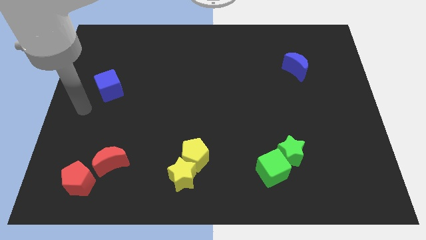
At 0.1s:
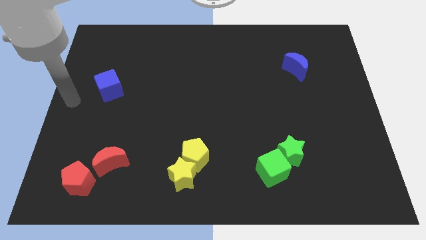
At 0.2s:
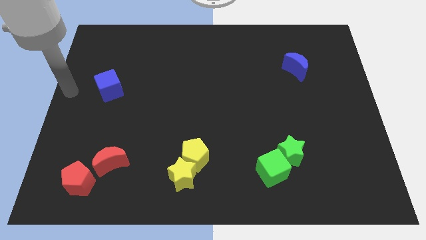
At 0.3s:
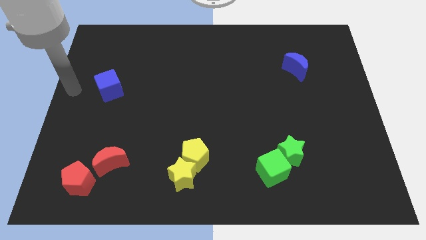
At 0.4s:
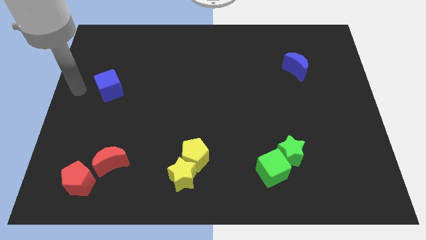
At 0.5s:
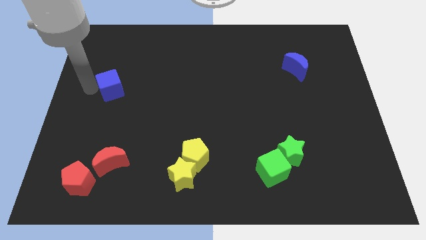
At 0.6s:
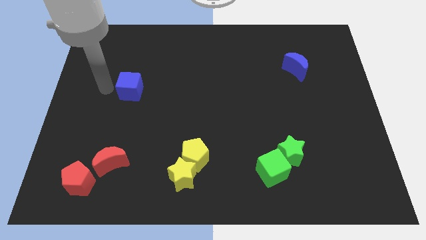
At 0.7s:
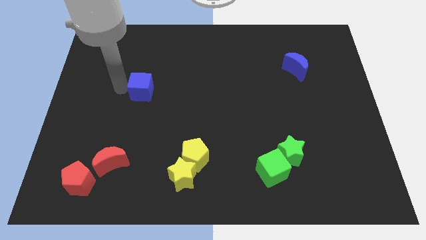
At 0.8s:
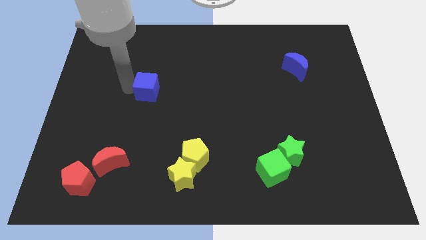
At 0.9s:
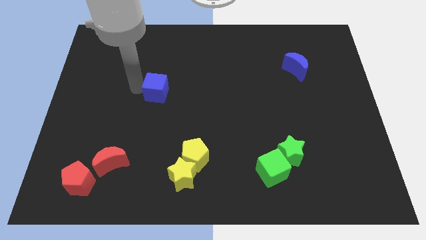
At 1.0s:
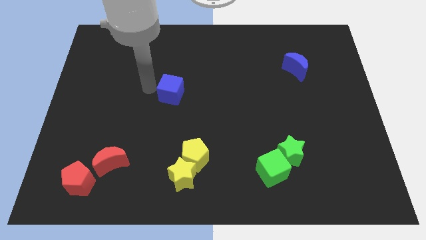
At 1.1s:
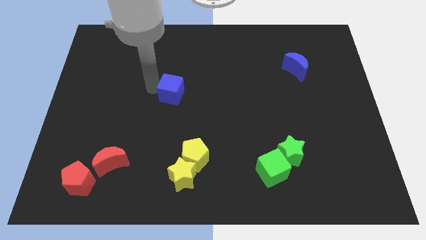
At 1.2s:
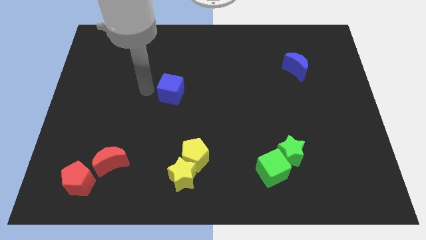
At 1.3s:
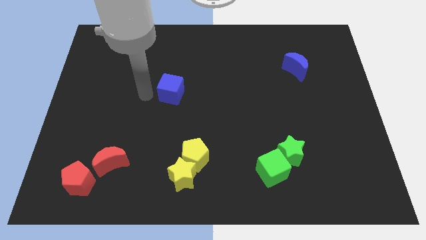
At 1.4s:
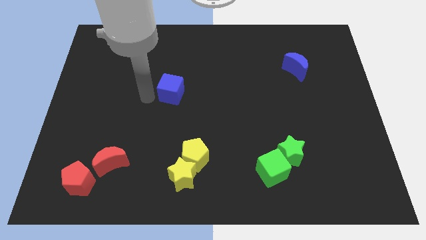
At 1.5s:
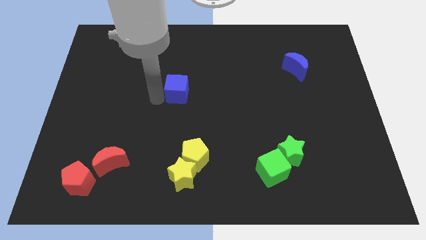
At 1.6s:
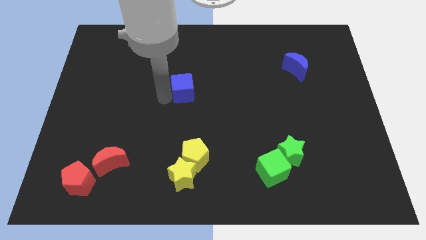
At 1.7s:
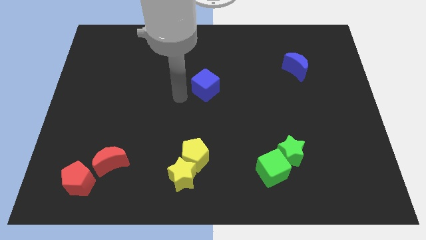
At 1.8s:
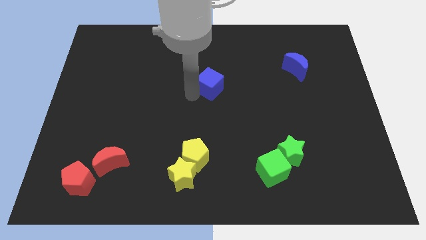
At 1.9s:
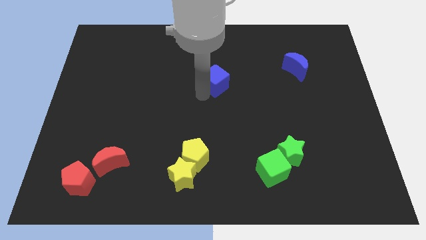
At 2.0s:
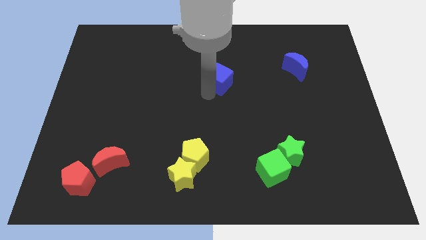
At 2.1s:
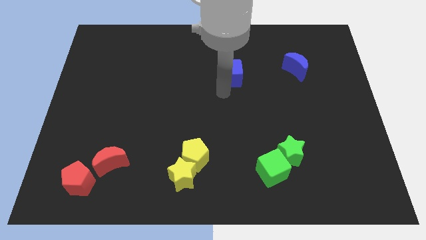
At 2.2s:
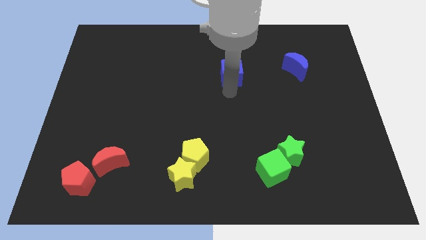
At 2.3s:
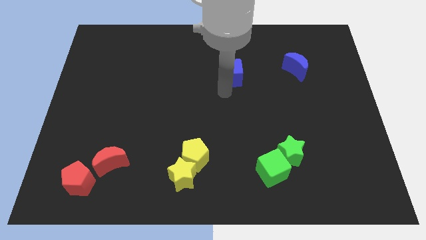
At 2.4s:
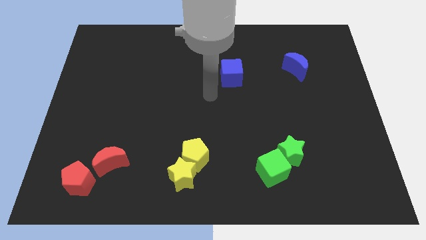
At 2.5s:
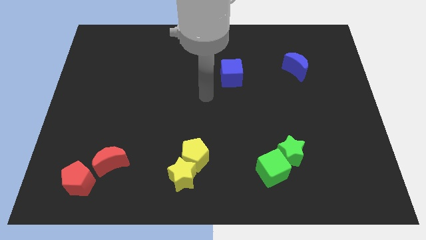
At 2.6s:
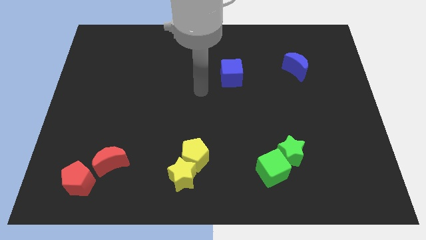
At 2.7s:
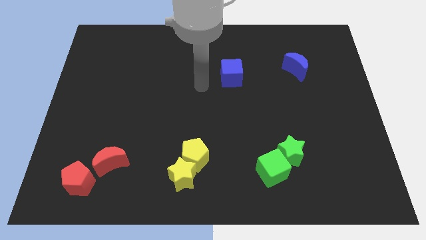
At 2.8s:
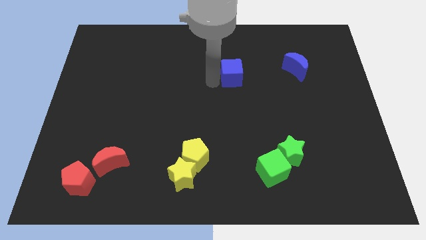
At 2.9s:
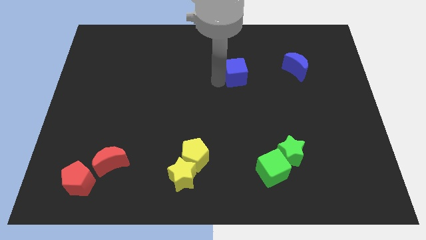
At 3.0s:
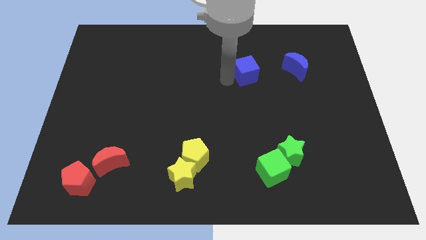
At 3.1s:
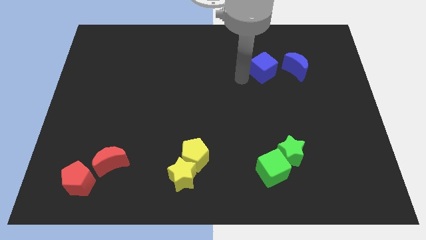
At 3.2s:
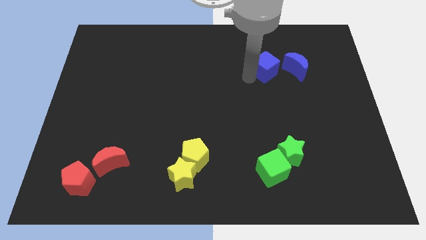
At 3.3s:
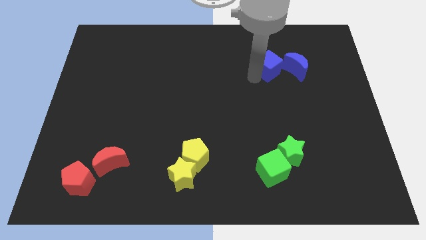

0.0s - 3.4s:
place the blue cube above the green cube

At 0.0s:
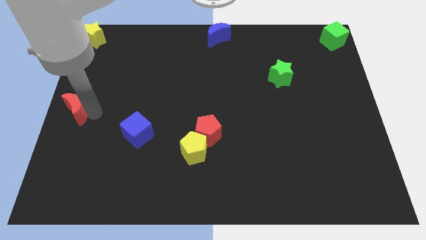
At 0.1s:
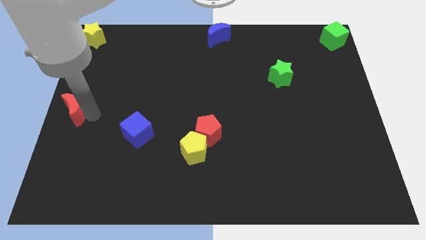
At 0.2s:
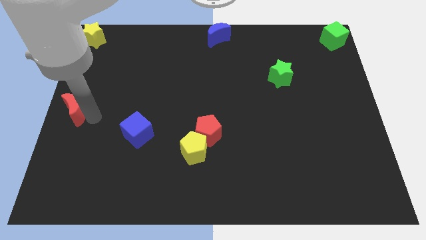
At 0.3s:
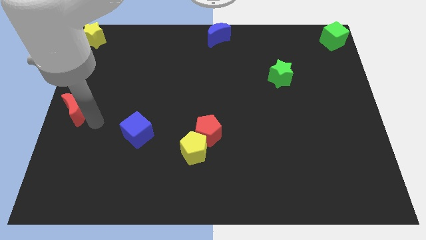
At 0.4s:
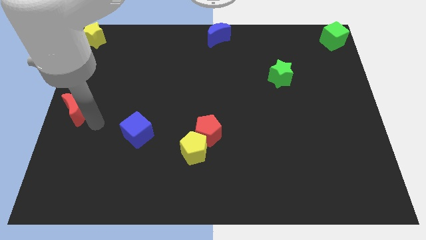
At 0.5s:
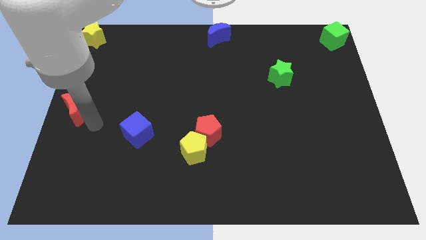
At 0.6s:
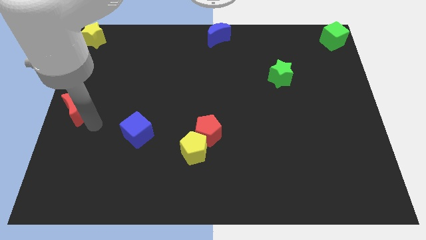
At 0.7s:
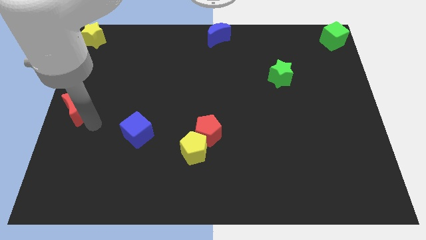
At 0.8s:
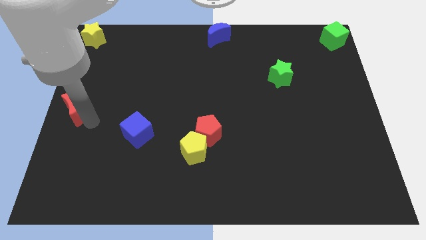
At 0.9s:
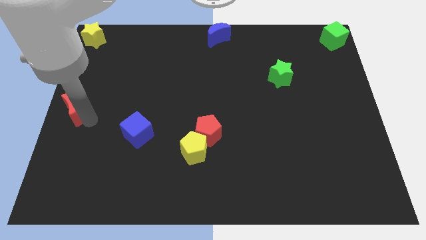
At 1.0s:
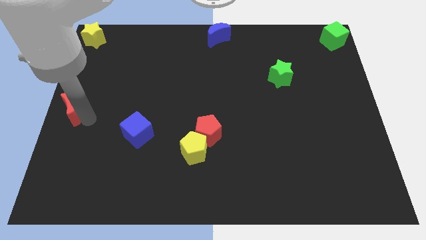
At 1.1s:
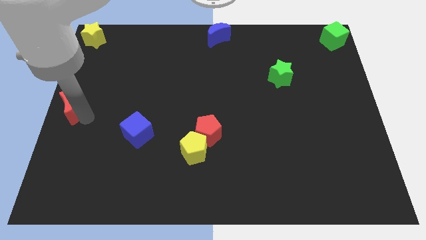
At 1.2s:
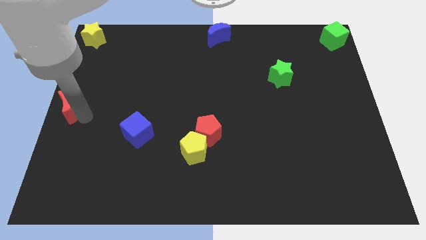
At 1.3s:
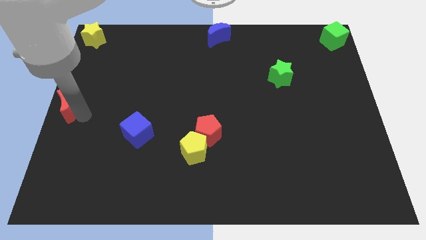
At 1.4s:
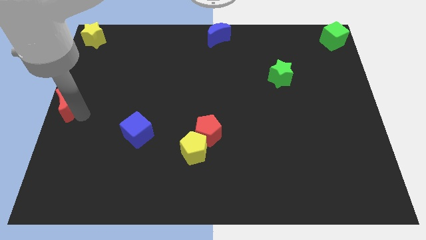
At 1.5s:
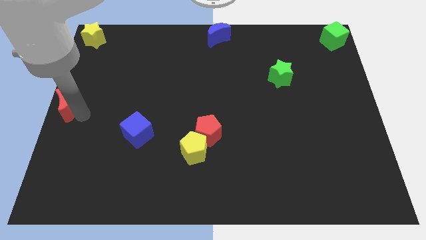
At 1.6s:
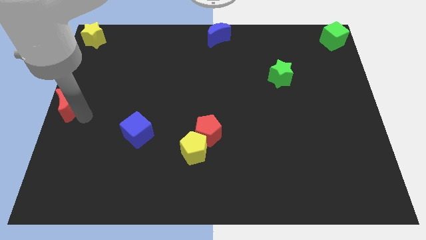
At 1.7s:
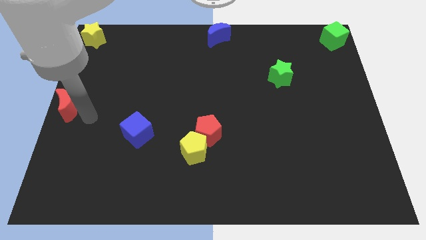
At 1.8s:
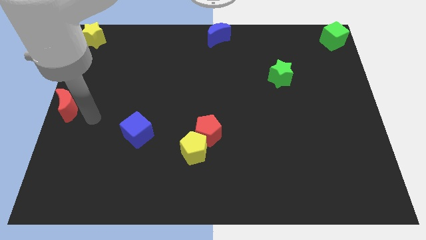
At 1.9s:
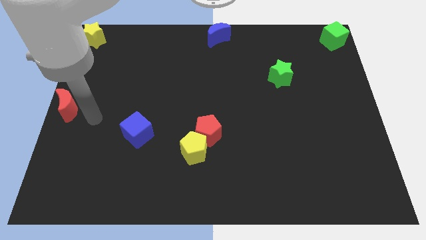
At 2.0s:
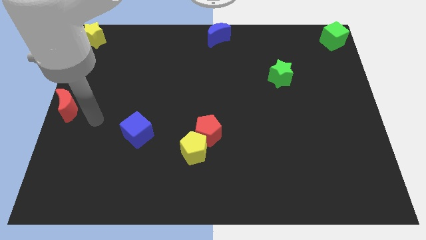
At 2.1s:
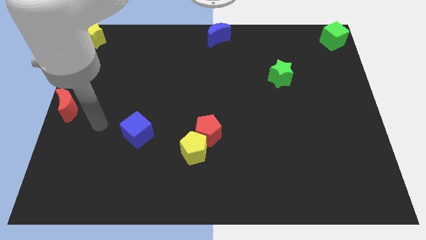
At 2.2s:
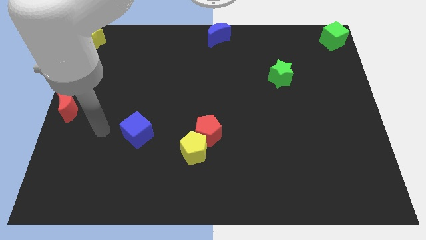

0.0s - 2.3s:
move the red crescent at the left center of the board

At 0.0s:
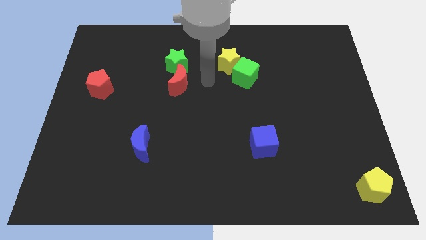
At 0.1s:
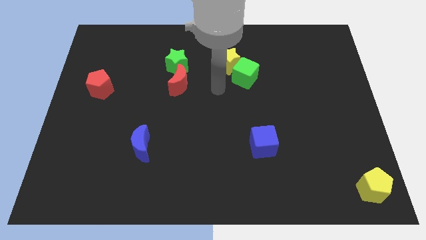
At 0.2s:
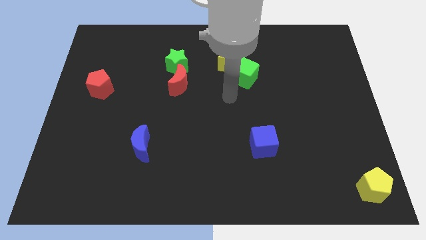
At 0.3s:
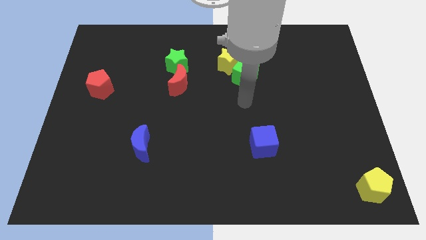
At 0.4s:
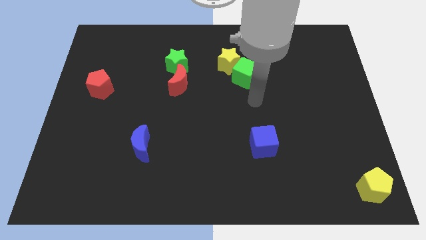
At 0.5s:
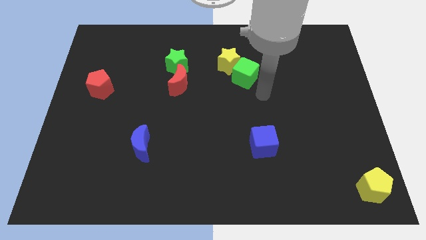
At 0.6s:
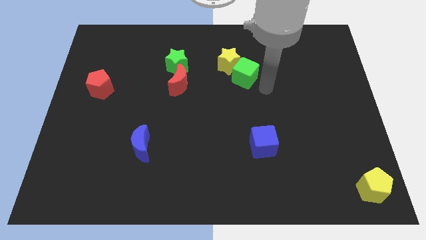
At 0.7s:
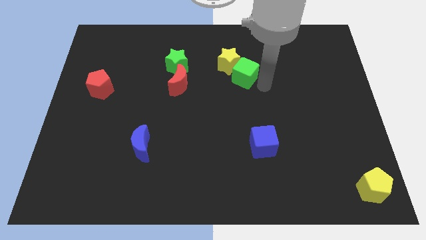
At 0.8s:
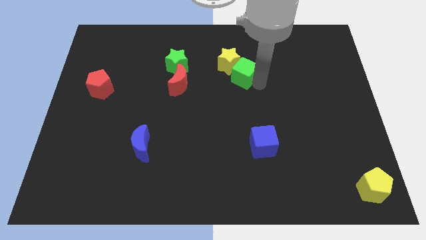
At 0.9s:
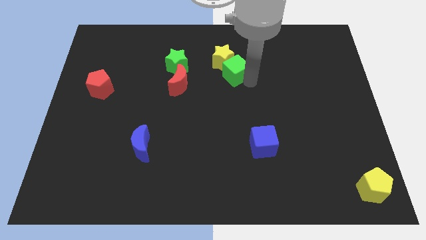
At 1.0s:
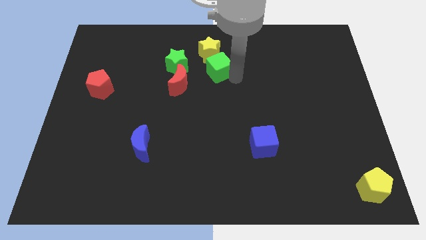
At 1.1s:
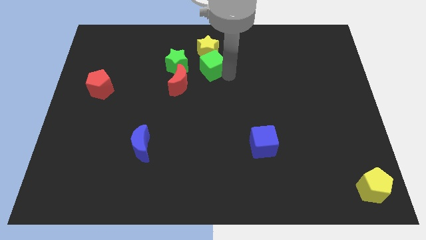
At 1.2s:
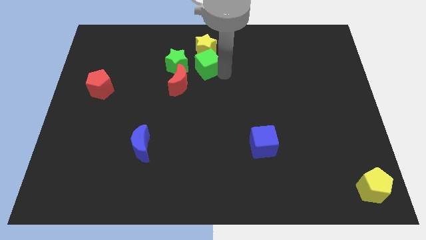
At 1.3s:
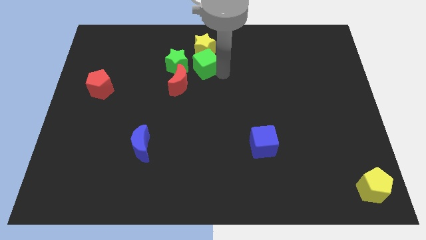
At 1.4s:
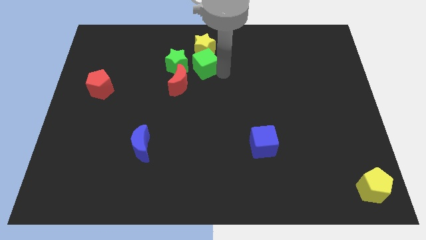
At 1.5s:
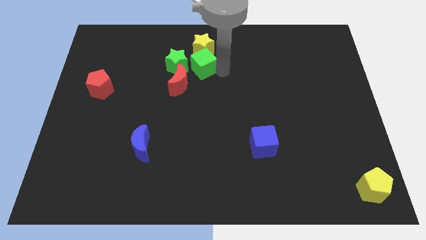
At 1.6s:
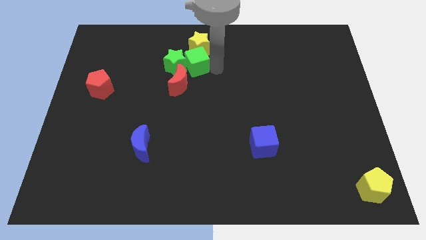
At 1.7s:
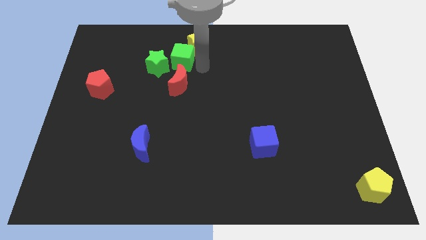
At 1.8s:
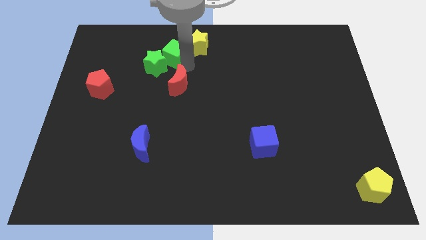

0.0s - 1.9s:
put the green cube into the green star

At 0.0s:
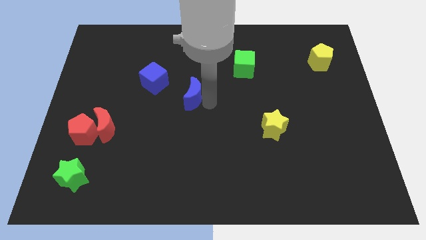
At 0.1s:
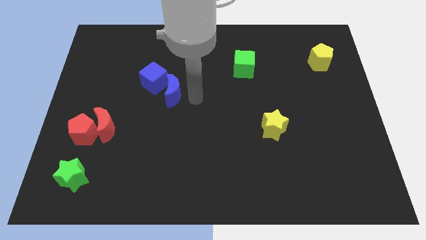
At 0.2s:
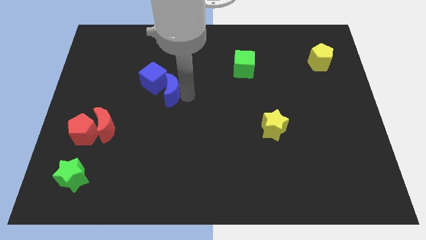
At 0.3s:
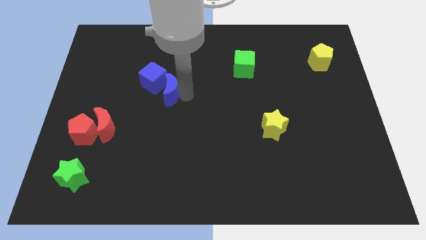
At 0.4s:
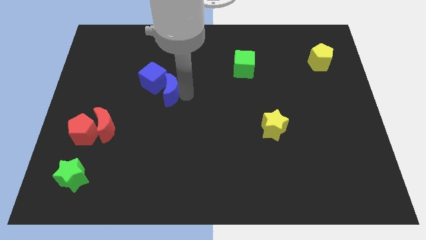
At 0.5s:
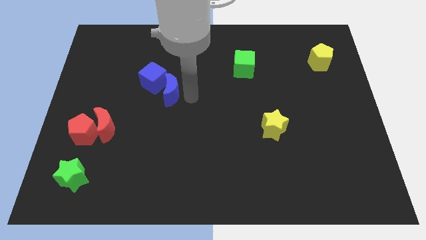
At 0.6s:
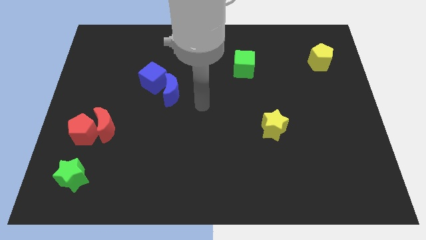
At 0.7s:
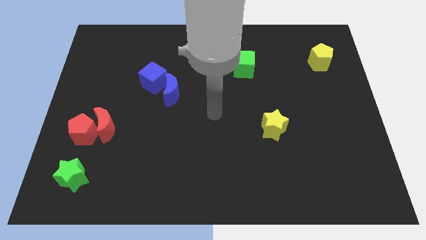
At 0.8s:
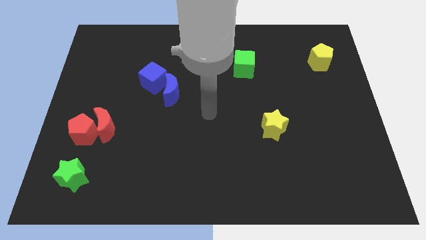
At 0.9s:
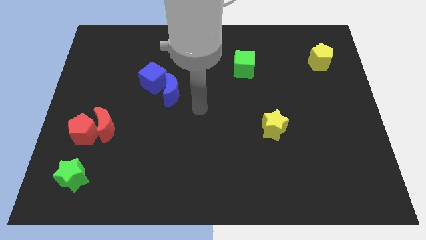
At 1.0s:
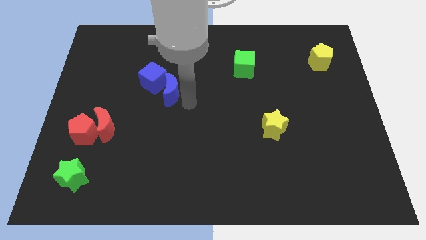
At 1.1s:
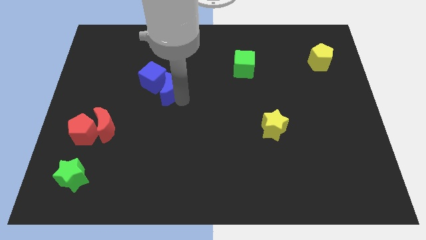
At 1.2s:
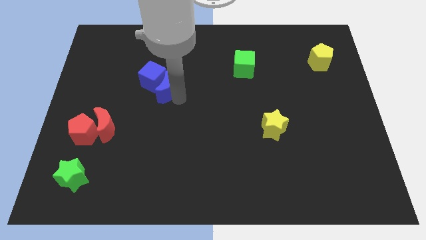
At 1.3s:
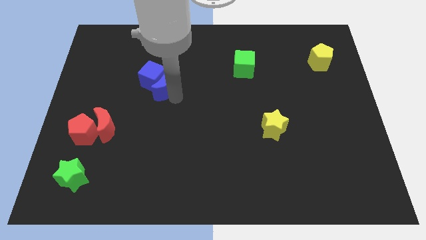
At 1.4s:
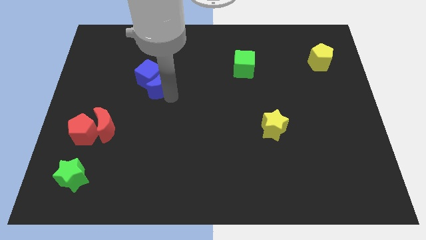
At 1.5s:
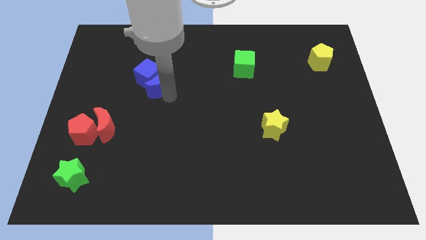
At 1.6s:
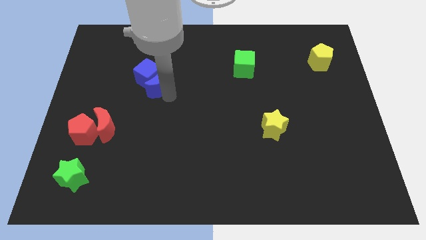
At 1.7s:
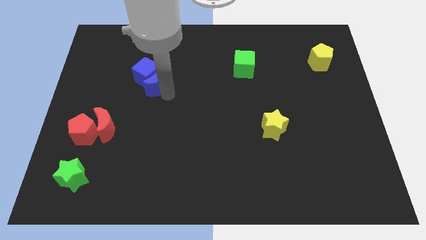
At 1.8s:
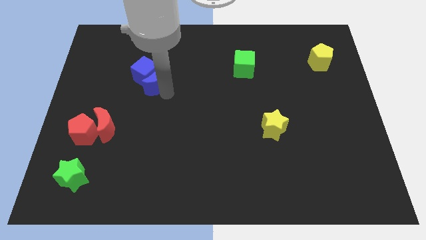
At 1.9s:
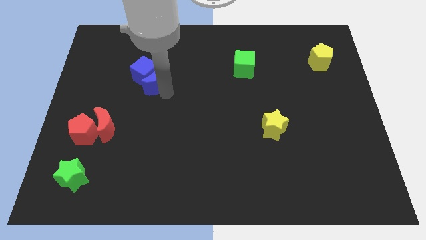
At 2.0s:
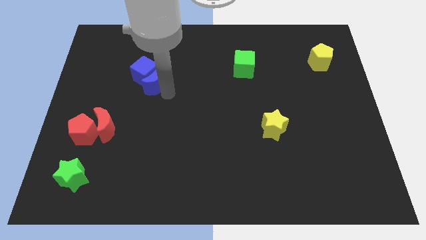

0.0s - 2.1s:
place the blue moon close to the blue cube
